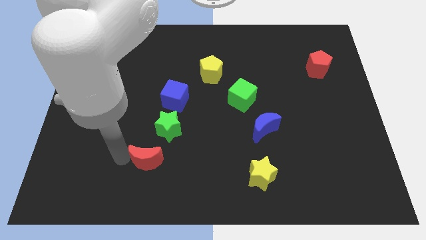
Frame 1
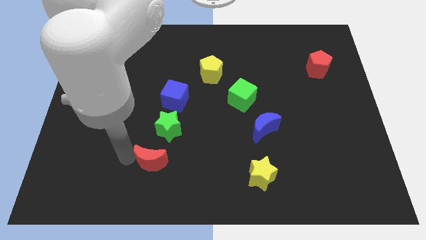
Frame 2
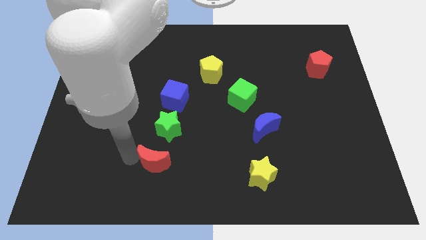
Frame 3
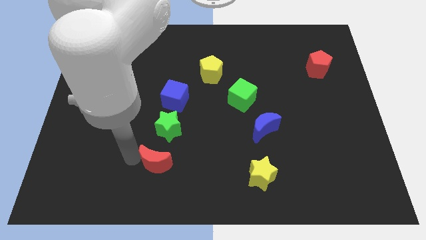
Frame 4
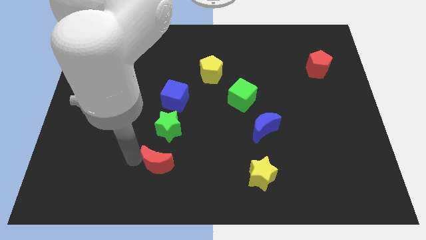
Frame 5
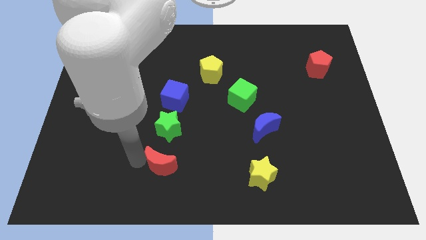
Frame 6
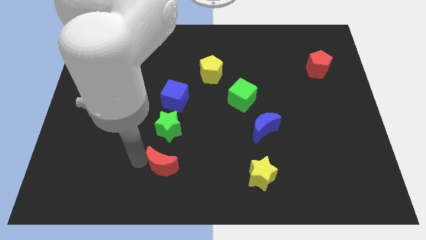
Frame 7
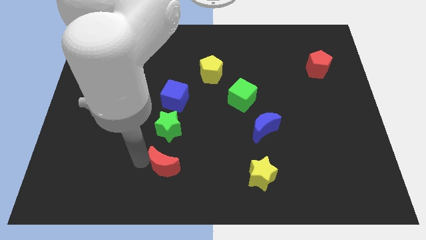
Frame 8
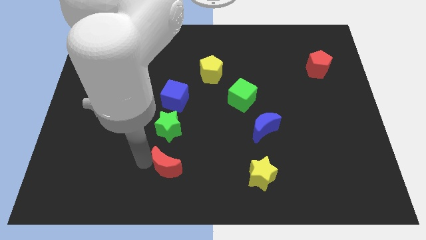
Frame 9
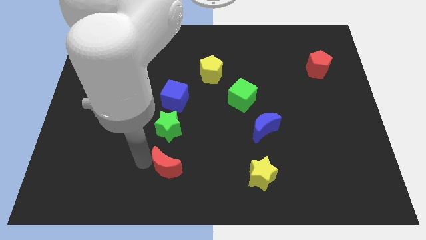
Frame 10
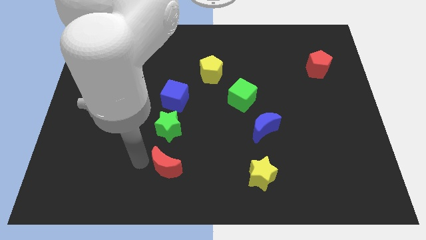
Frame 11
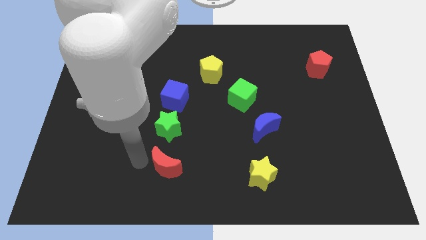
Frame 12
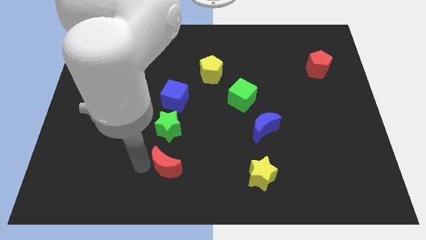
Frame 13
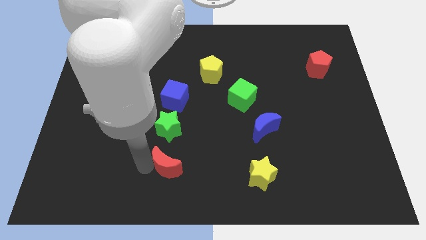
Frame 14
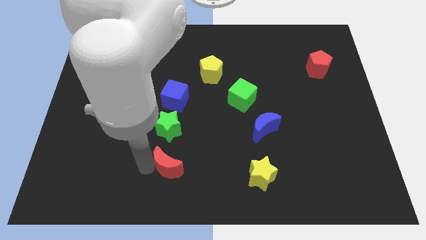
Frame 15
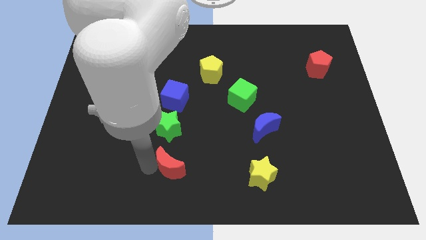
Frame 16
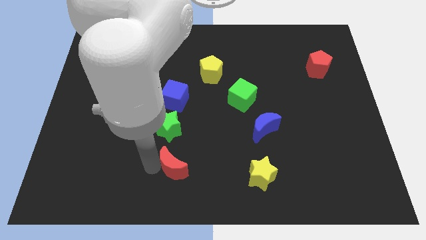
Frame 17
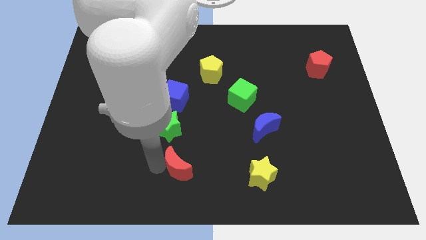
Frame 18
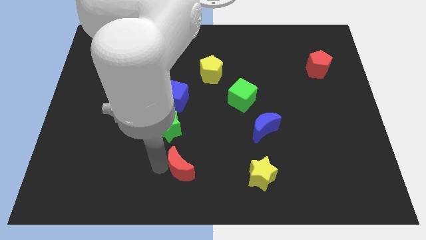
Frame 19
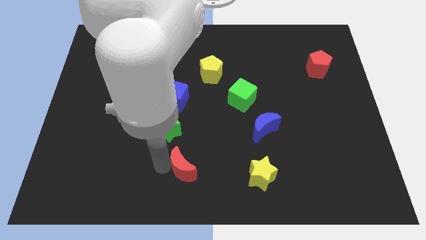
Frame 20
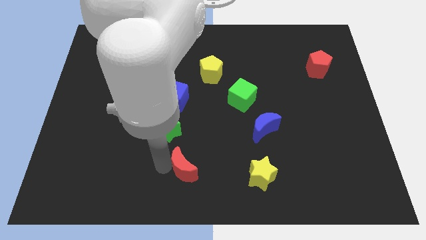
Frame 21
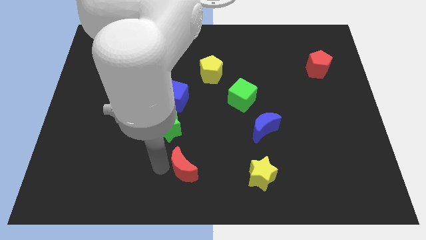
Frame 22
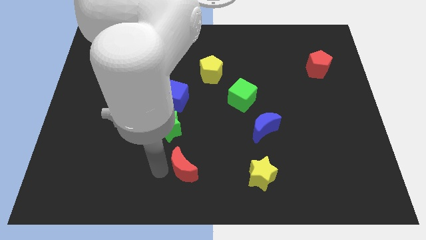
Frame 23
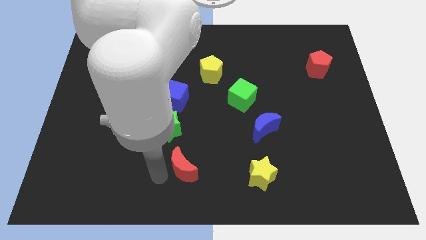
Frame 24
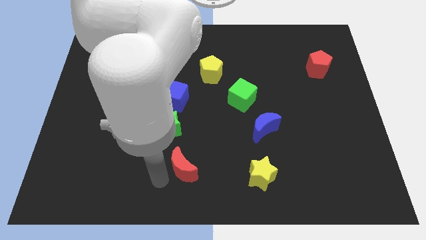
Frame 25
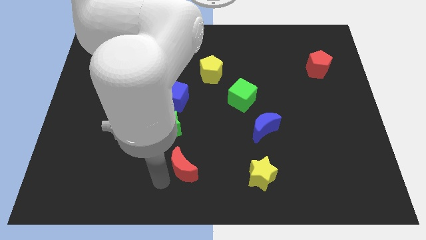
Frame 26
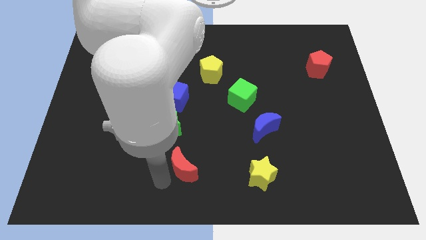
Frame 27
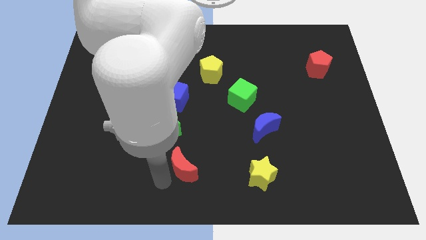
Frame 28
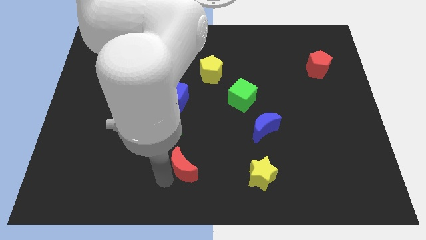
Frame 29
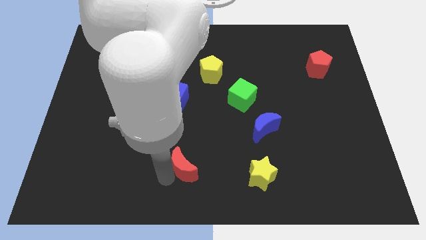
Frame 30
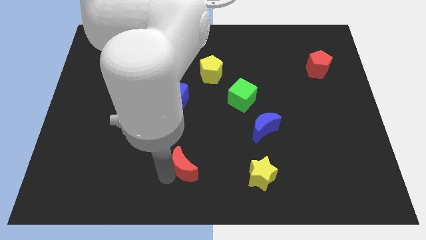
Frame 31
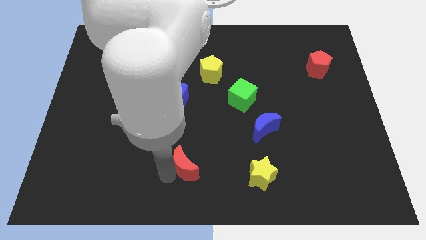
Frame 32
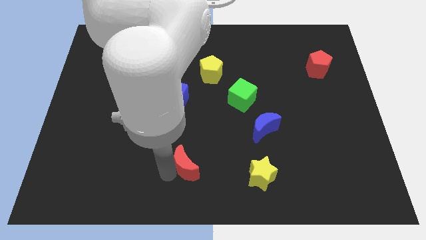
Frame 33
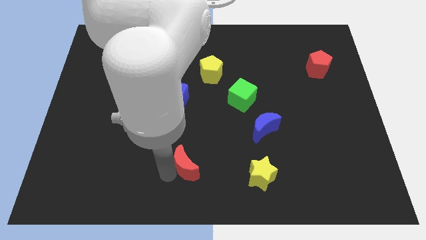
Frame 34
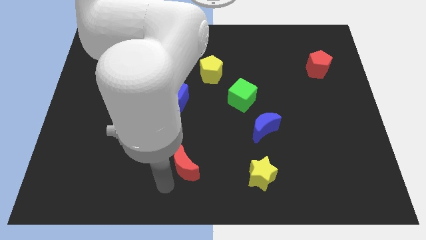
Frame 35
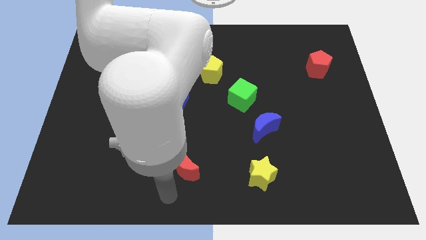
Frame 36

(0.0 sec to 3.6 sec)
put the red moon to the left of yellow star

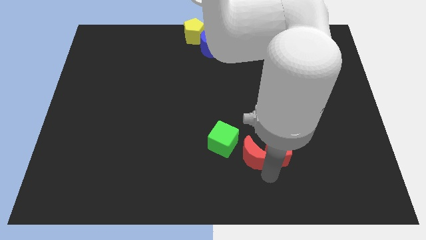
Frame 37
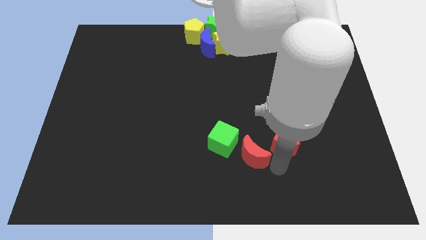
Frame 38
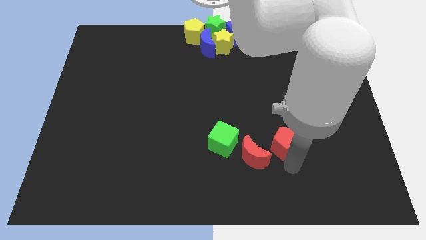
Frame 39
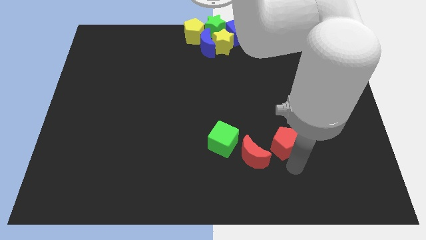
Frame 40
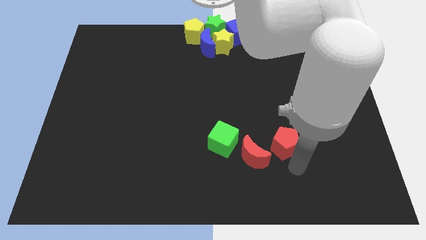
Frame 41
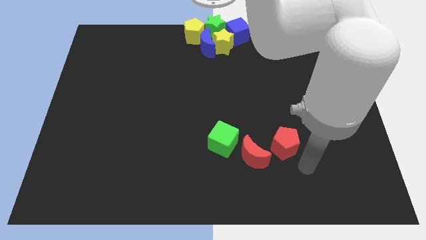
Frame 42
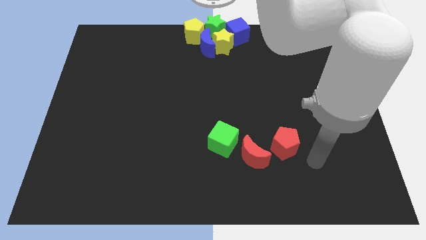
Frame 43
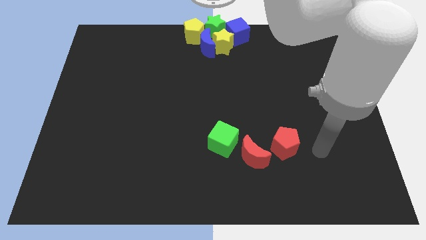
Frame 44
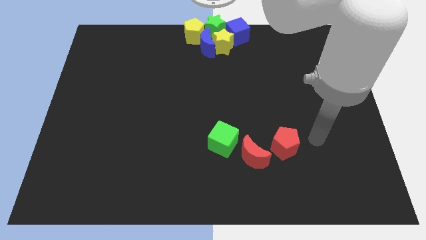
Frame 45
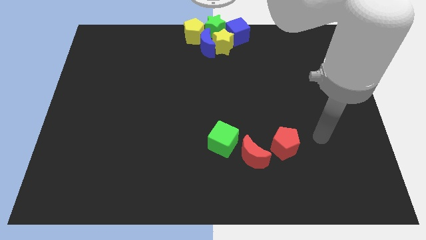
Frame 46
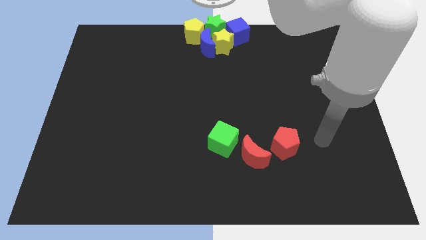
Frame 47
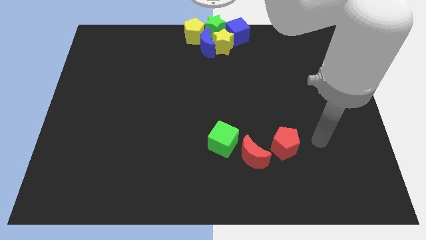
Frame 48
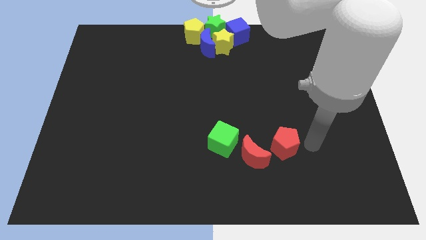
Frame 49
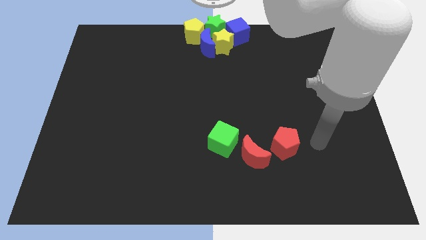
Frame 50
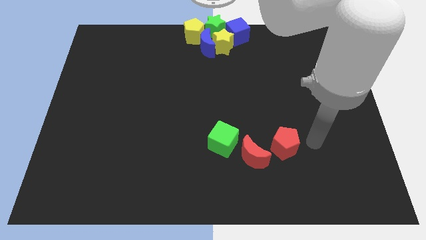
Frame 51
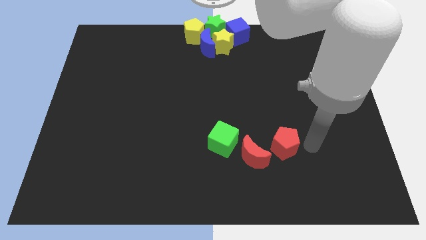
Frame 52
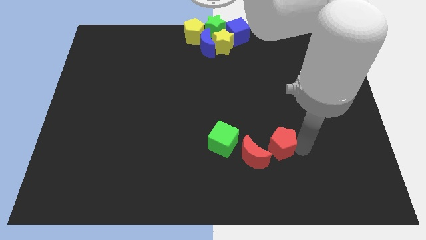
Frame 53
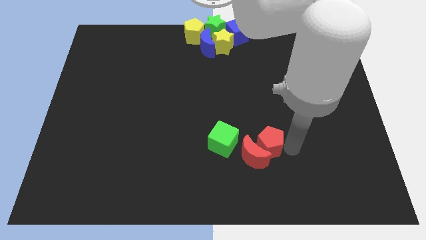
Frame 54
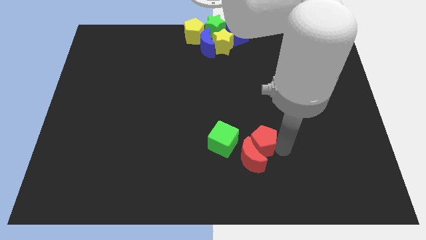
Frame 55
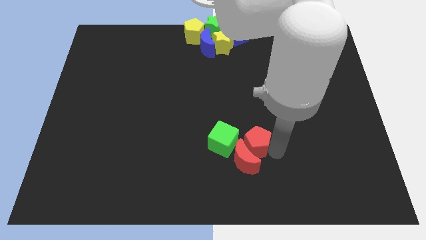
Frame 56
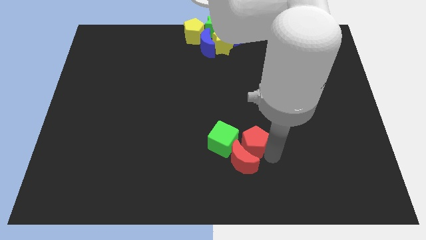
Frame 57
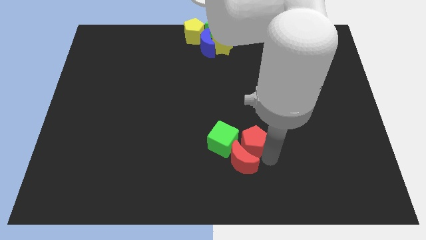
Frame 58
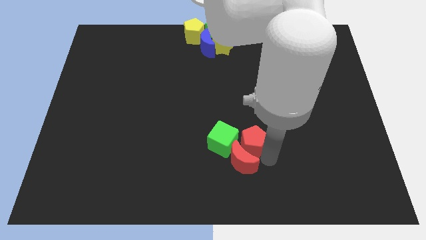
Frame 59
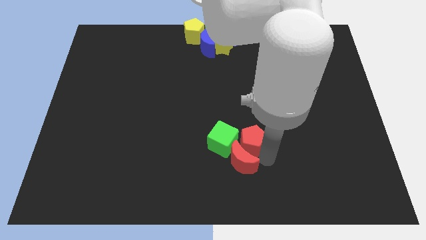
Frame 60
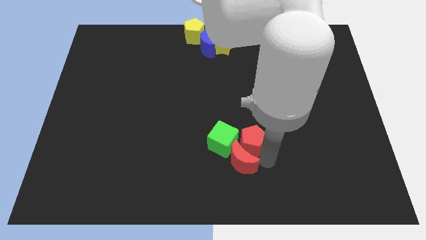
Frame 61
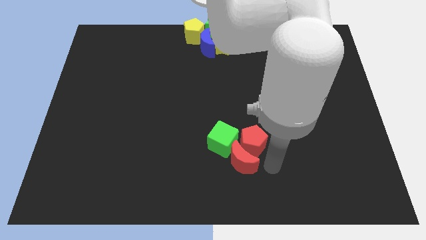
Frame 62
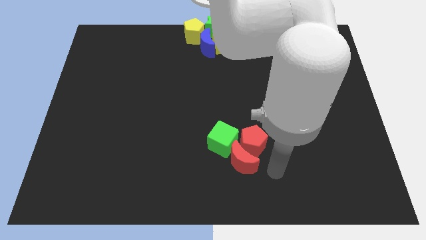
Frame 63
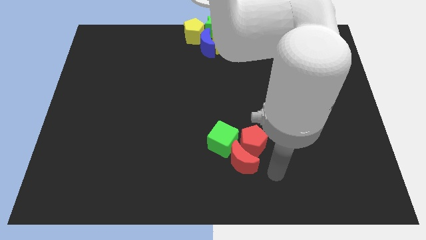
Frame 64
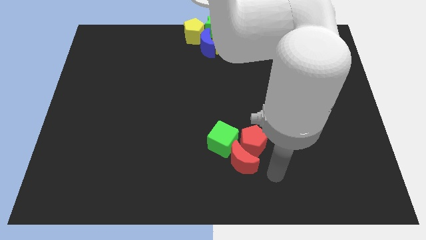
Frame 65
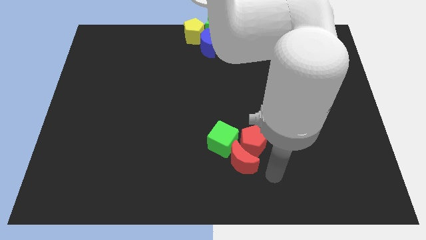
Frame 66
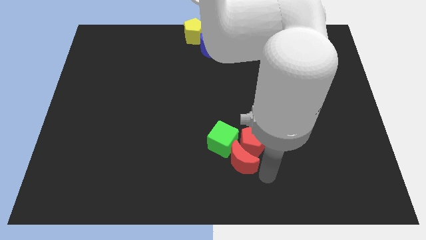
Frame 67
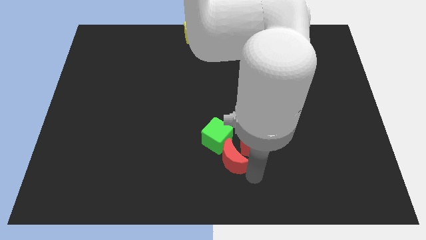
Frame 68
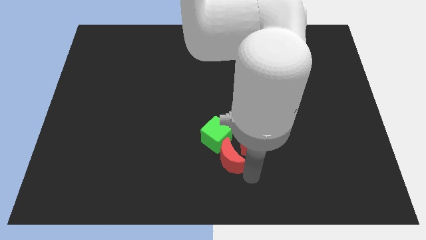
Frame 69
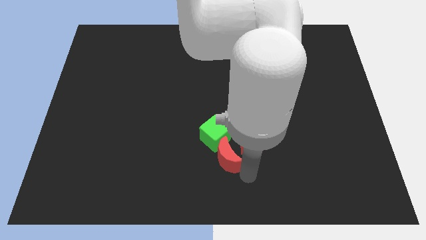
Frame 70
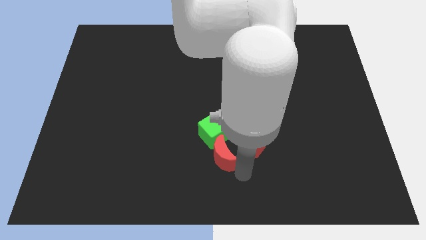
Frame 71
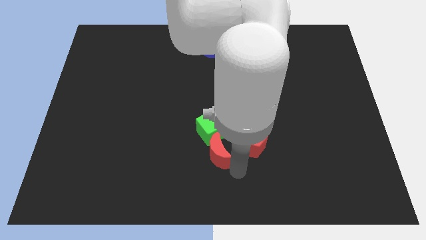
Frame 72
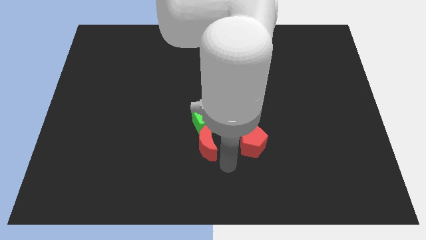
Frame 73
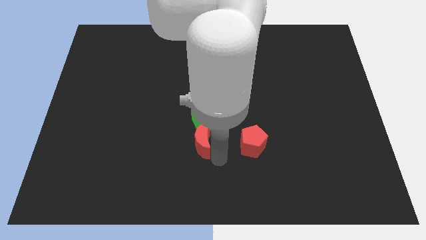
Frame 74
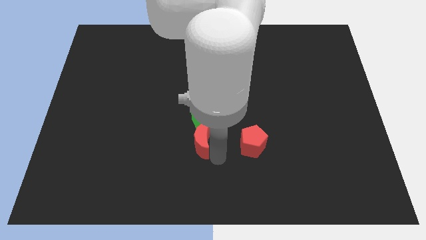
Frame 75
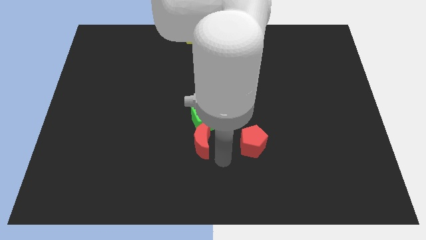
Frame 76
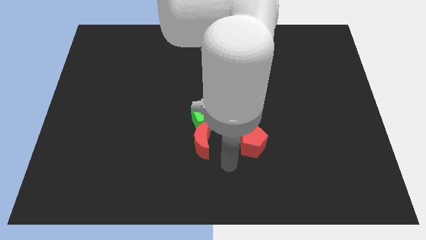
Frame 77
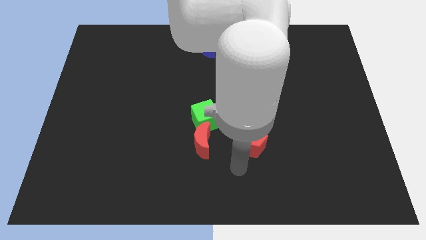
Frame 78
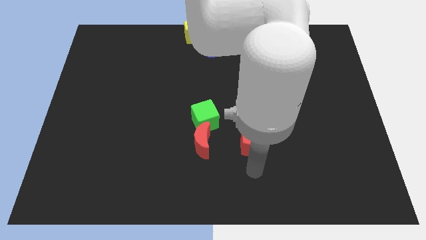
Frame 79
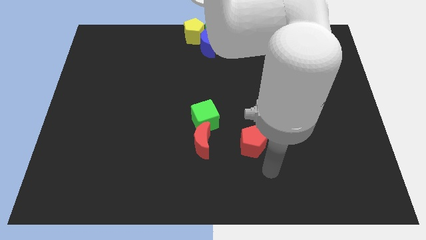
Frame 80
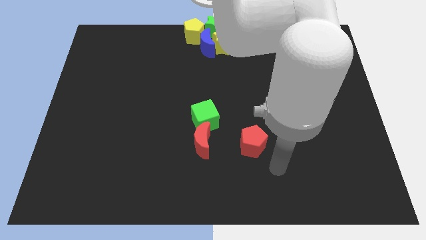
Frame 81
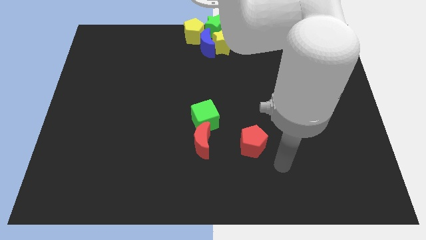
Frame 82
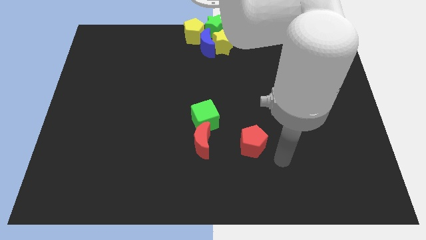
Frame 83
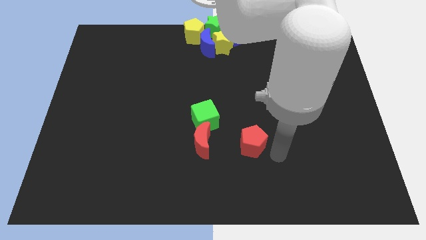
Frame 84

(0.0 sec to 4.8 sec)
move the red crescent below to the green cube

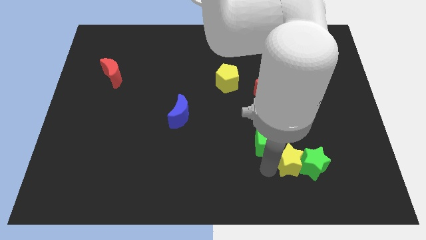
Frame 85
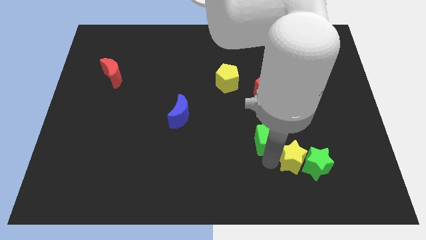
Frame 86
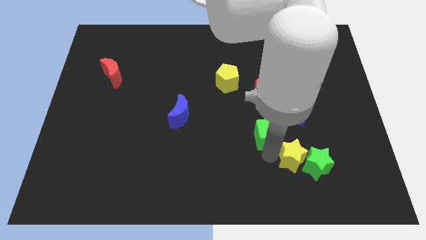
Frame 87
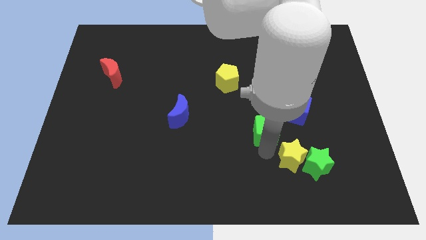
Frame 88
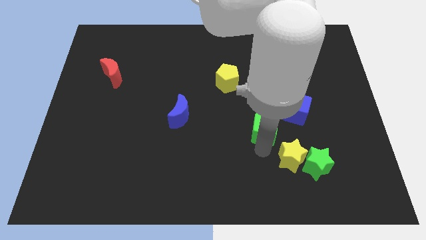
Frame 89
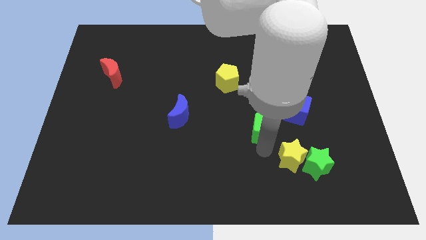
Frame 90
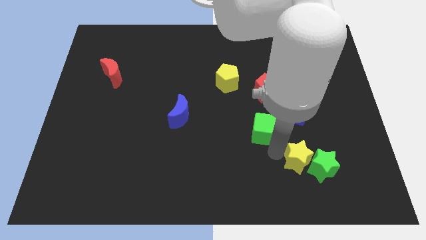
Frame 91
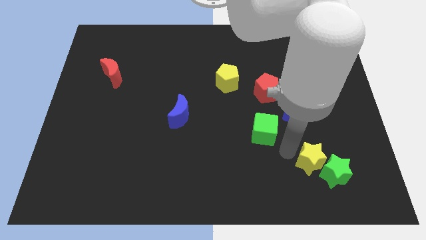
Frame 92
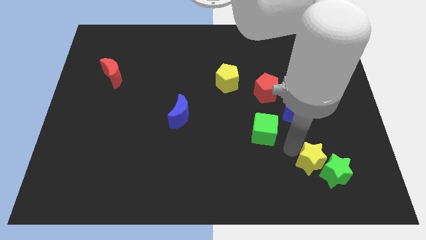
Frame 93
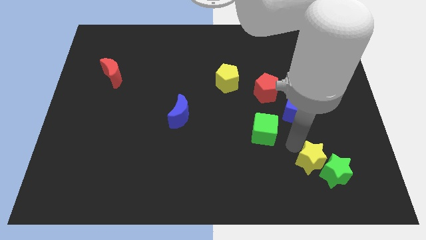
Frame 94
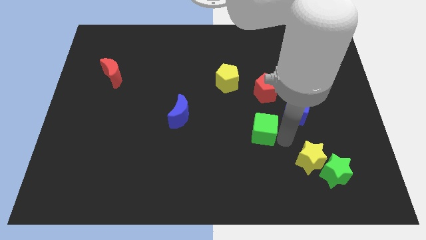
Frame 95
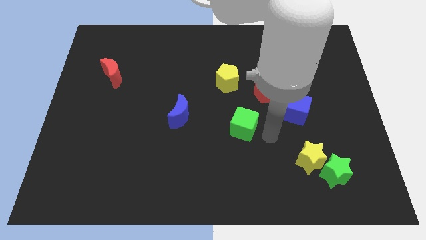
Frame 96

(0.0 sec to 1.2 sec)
slightly push the green star and the yellow star towards the bottom right corner of the board
